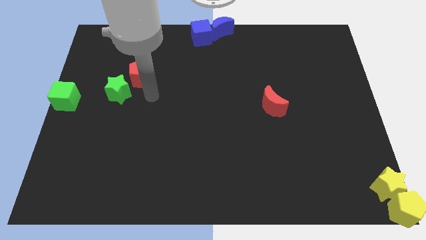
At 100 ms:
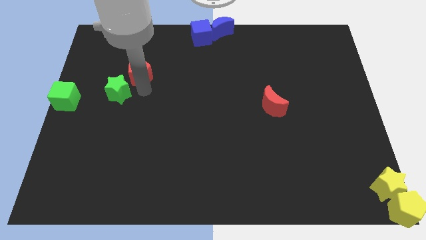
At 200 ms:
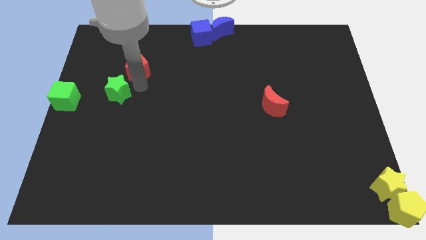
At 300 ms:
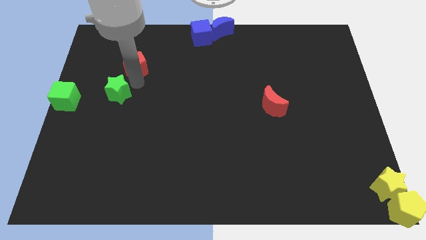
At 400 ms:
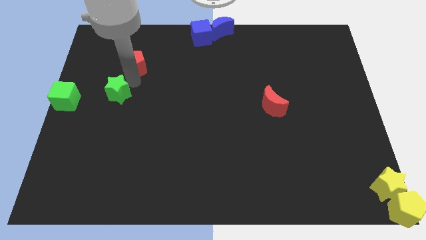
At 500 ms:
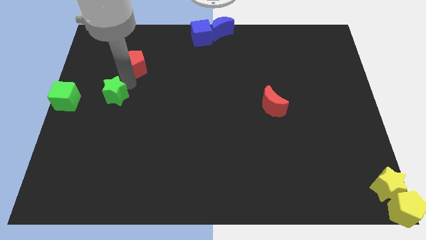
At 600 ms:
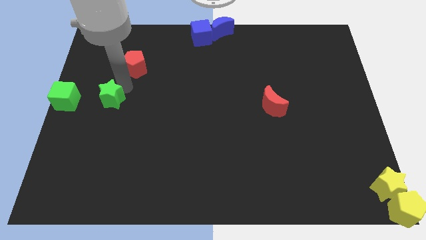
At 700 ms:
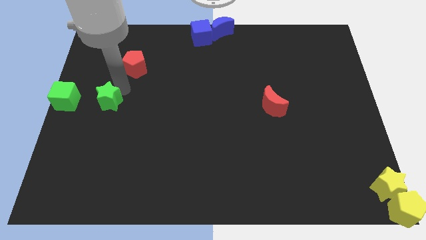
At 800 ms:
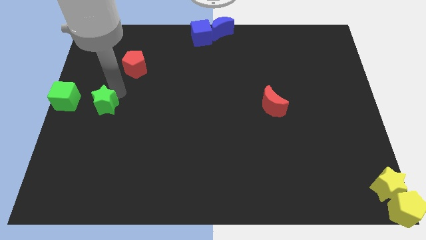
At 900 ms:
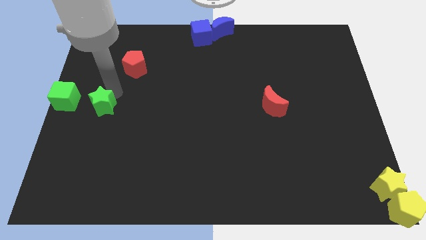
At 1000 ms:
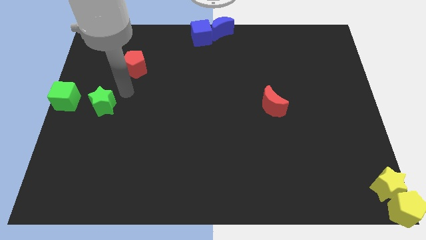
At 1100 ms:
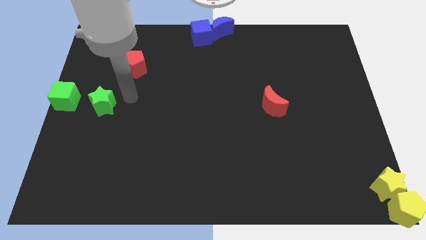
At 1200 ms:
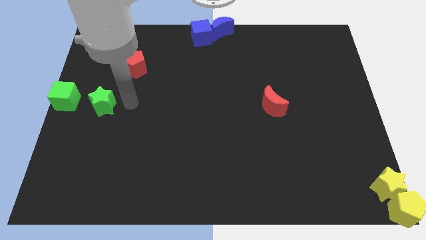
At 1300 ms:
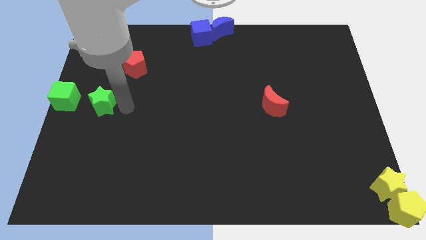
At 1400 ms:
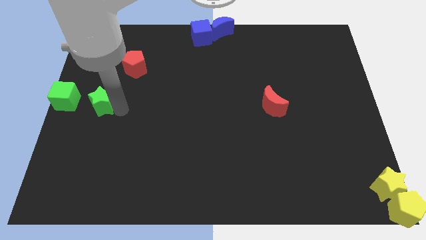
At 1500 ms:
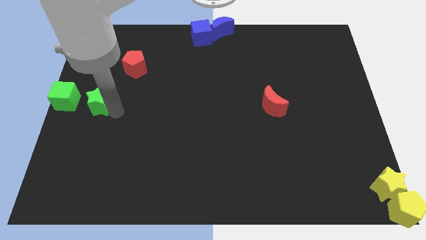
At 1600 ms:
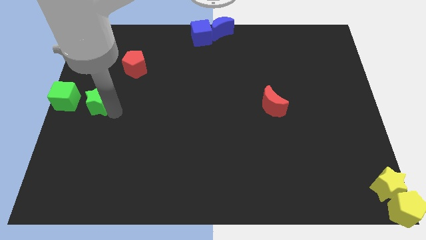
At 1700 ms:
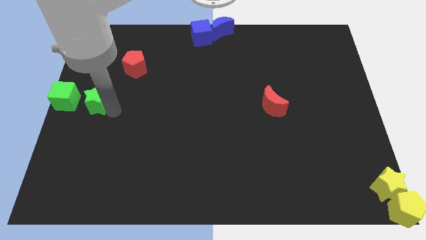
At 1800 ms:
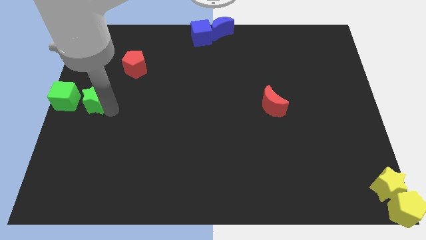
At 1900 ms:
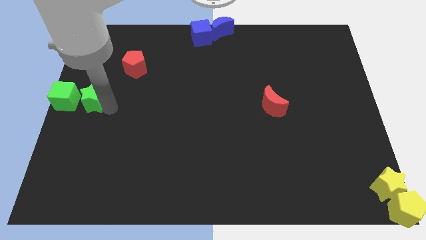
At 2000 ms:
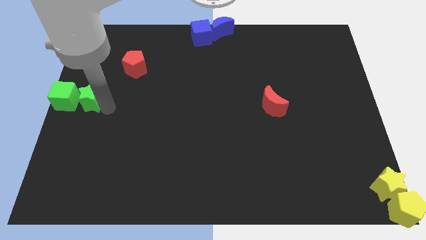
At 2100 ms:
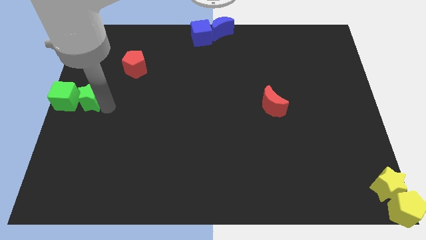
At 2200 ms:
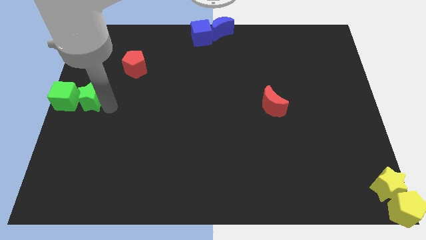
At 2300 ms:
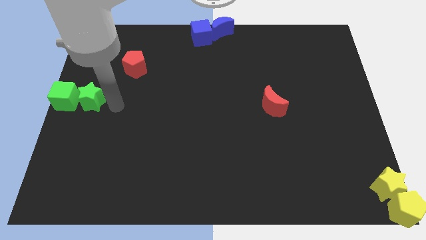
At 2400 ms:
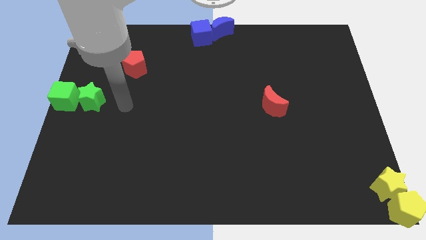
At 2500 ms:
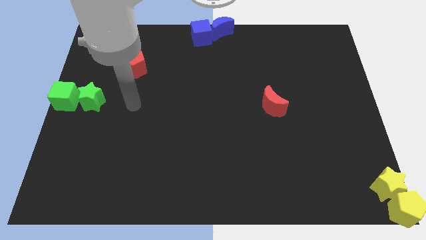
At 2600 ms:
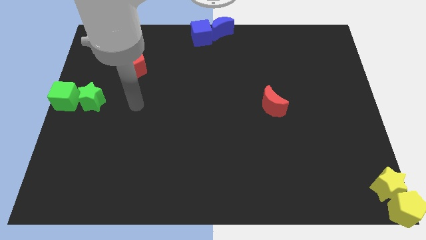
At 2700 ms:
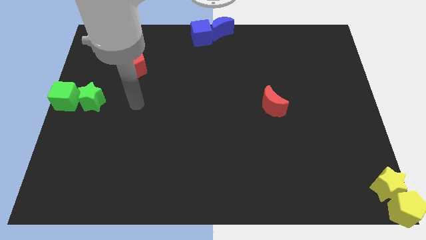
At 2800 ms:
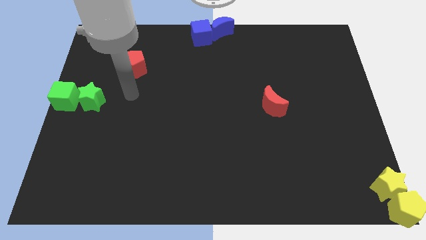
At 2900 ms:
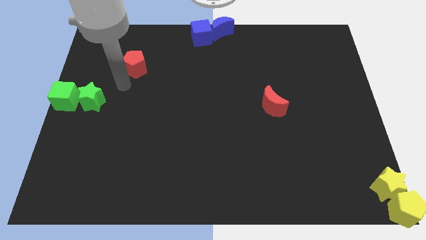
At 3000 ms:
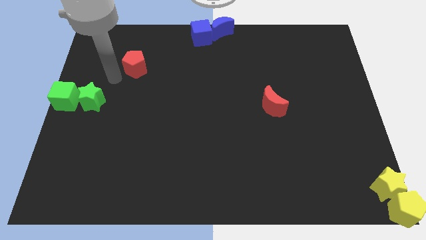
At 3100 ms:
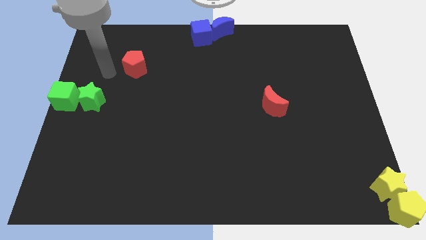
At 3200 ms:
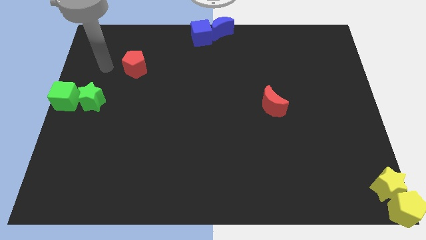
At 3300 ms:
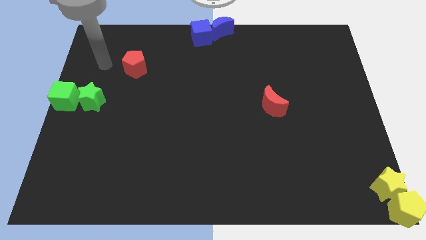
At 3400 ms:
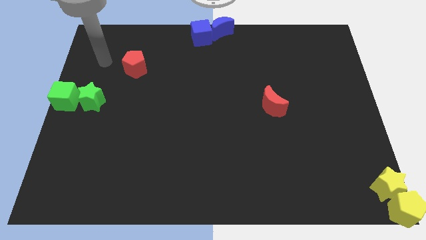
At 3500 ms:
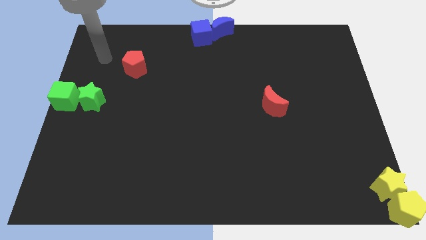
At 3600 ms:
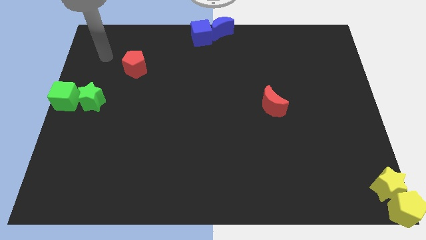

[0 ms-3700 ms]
push green star to the right of green cube

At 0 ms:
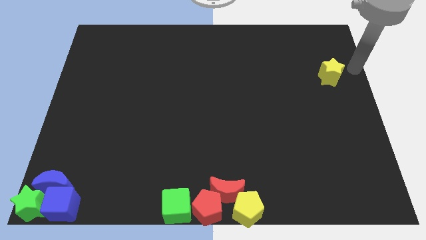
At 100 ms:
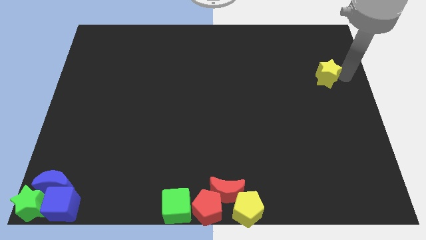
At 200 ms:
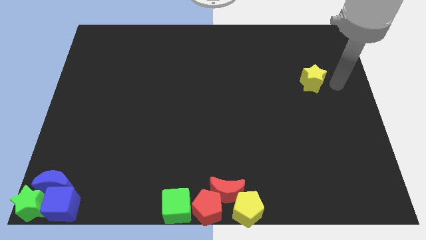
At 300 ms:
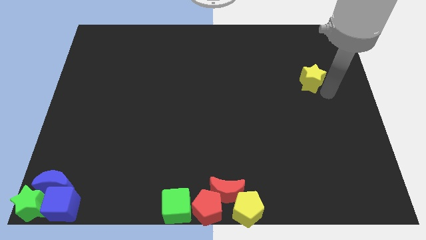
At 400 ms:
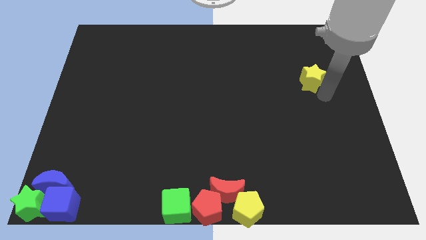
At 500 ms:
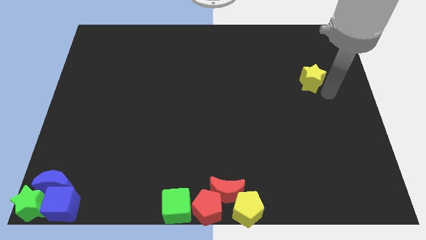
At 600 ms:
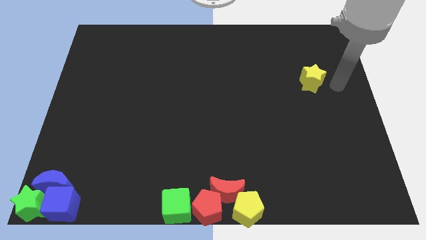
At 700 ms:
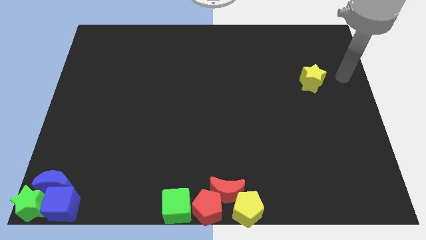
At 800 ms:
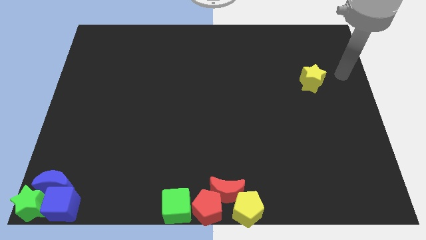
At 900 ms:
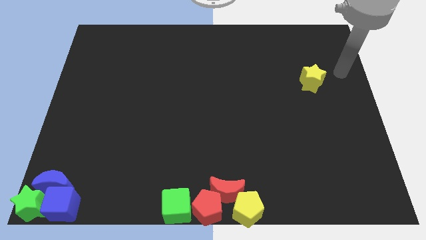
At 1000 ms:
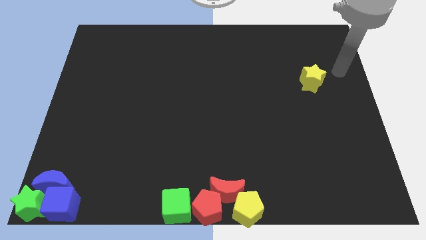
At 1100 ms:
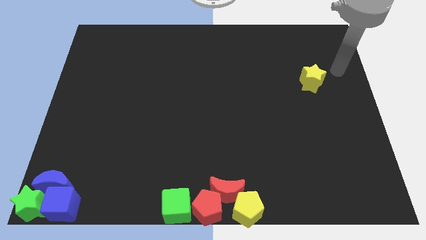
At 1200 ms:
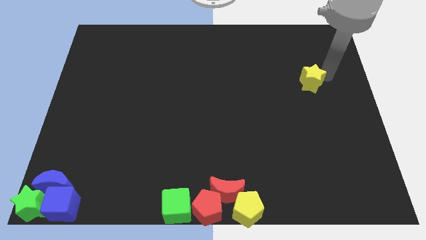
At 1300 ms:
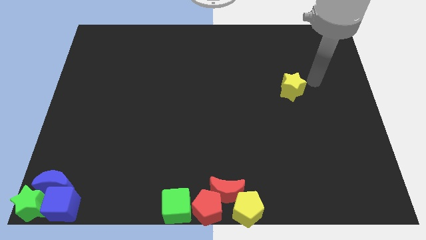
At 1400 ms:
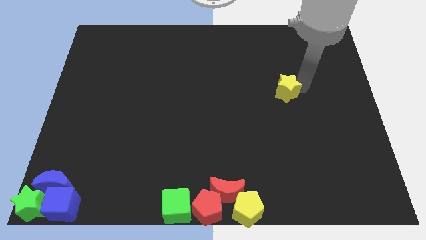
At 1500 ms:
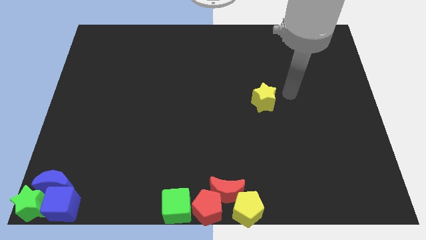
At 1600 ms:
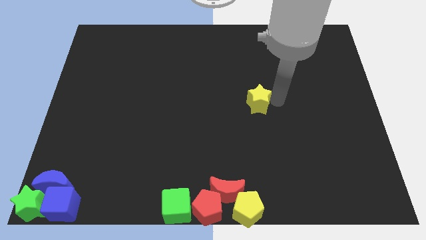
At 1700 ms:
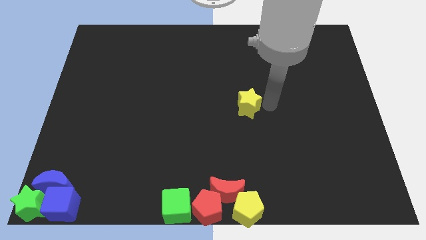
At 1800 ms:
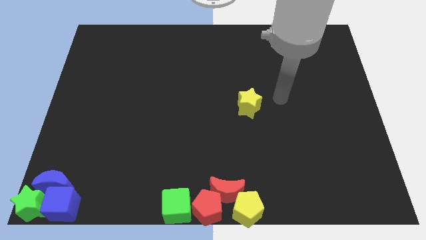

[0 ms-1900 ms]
move the yellow star to the center of the board

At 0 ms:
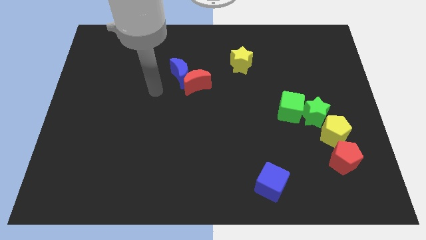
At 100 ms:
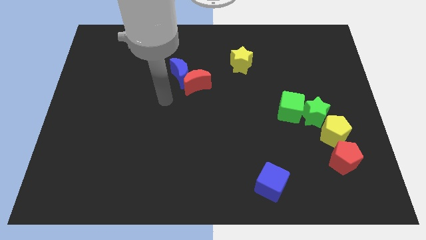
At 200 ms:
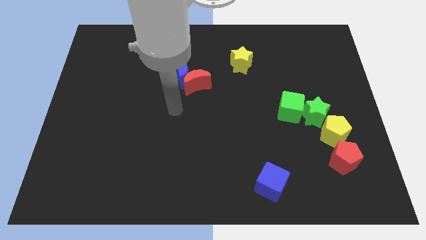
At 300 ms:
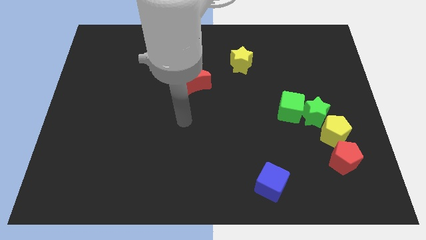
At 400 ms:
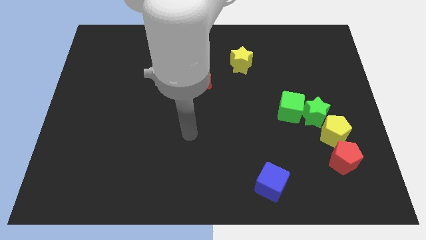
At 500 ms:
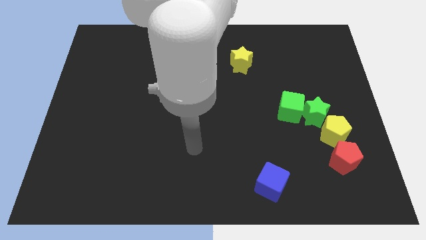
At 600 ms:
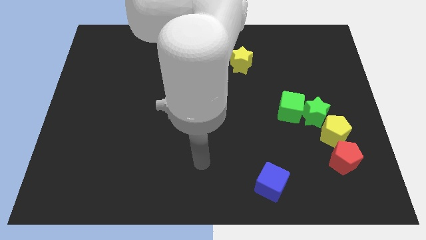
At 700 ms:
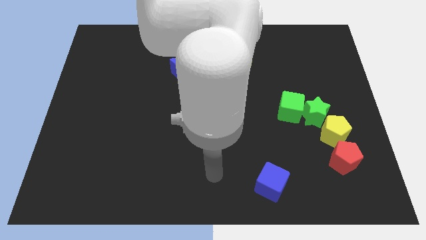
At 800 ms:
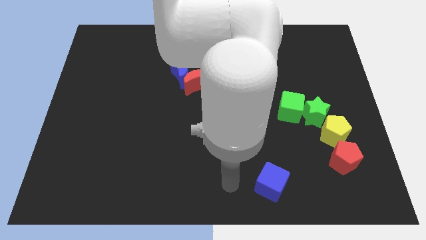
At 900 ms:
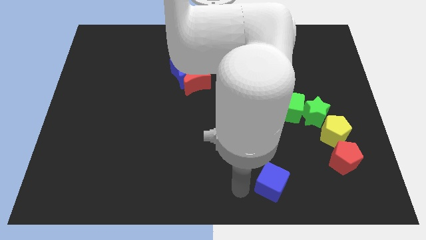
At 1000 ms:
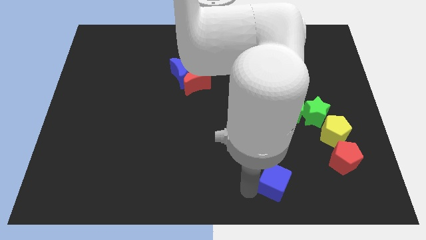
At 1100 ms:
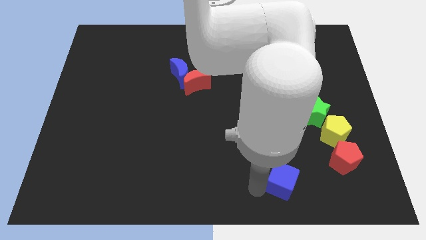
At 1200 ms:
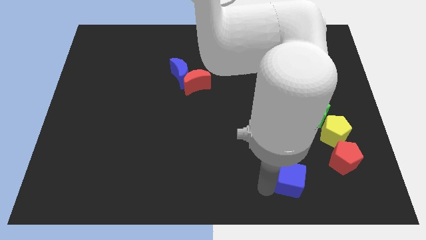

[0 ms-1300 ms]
push the blue cube slightly to the right side

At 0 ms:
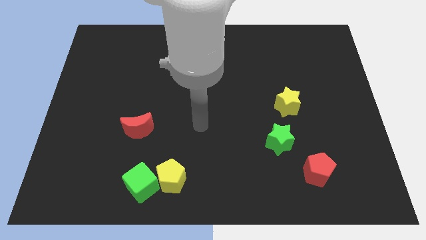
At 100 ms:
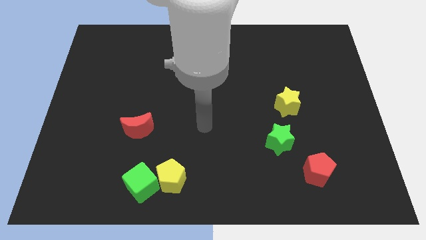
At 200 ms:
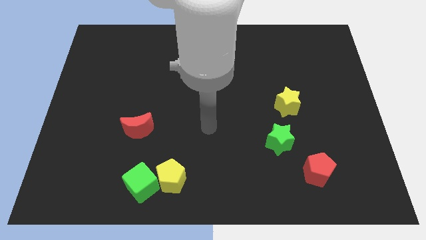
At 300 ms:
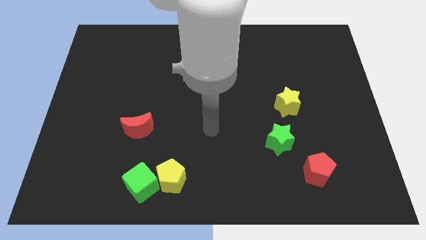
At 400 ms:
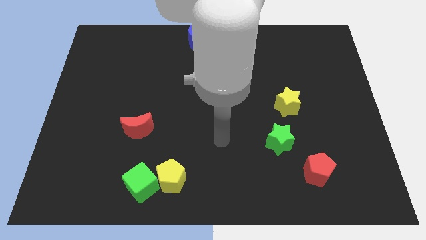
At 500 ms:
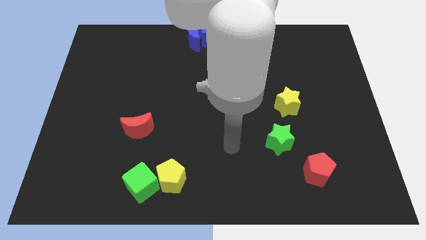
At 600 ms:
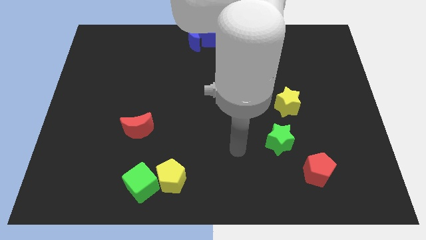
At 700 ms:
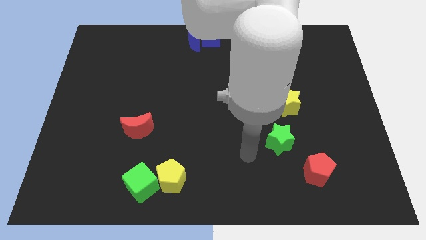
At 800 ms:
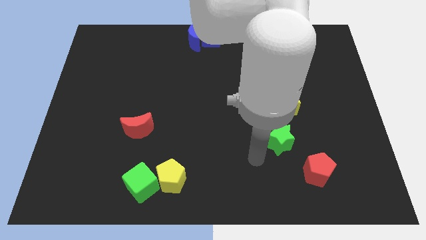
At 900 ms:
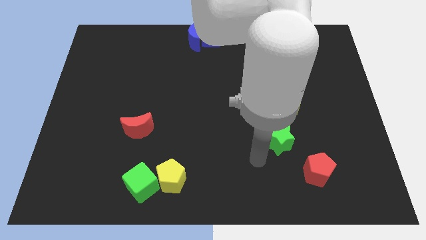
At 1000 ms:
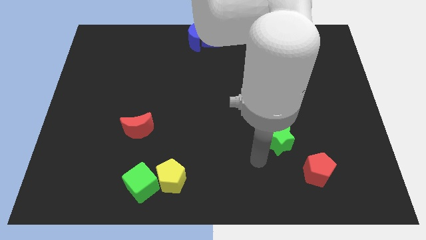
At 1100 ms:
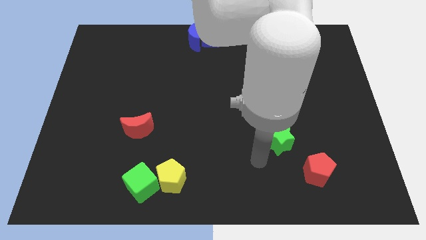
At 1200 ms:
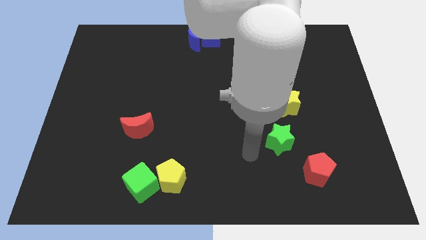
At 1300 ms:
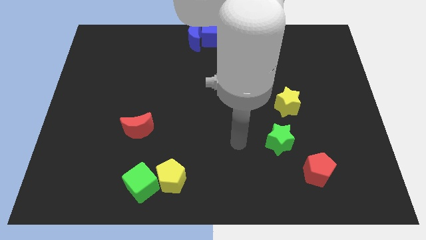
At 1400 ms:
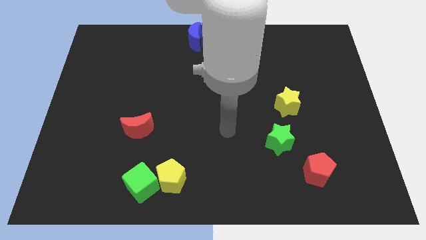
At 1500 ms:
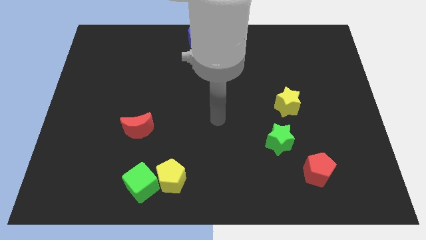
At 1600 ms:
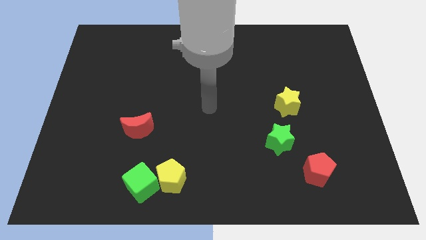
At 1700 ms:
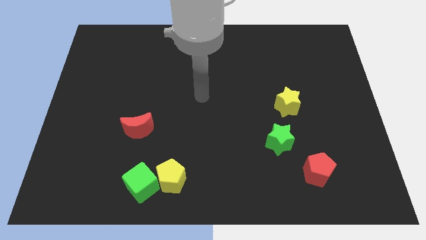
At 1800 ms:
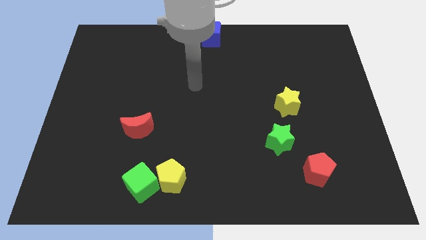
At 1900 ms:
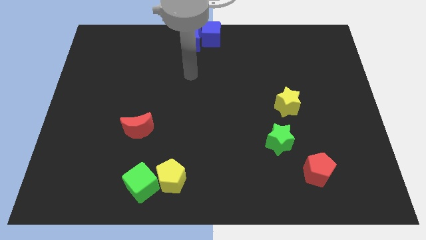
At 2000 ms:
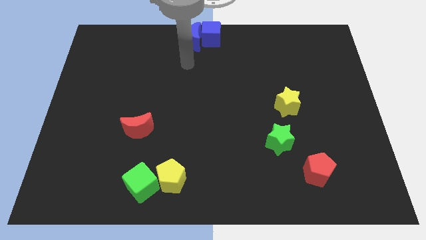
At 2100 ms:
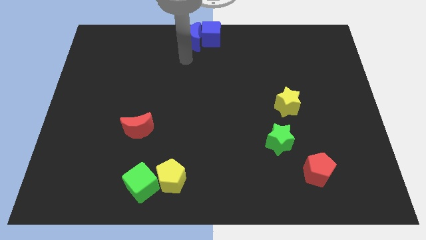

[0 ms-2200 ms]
place your arm at the bottom of the blue crescent

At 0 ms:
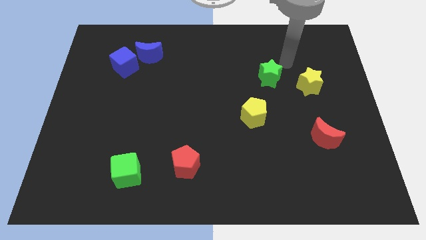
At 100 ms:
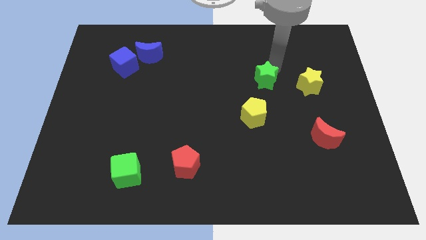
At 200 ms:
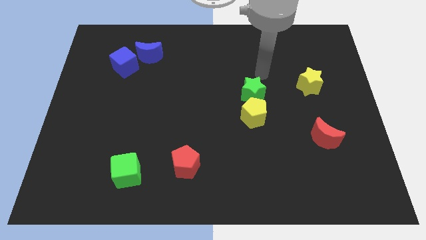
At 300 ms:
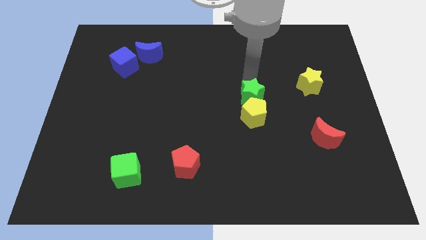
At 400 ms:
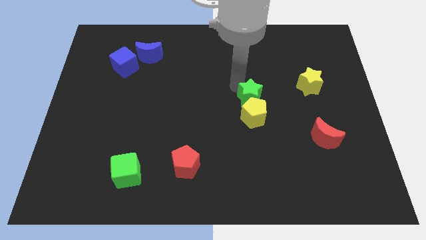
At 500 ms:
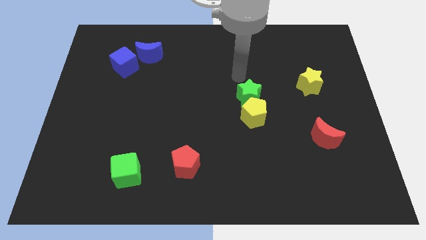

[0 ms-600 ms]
push green star above yellow pentagon
